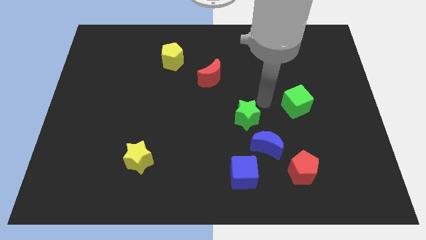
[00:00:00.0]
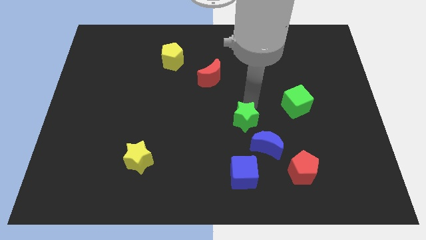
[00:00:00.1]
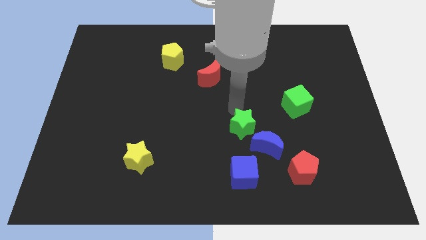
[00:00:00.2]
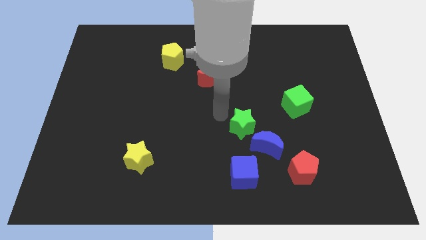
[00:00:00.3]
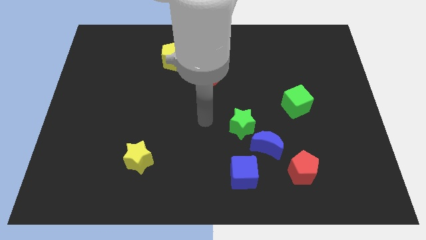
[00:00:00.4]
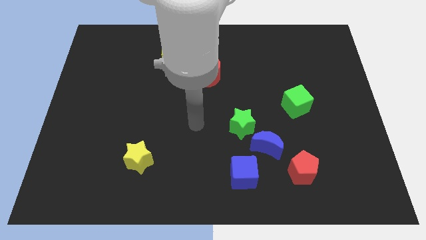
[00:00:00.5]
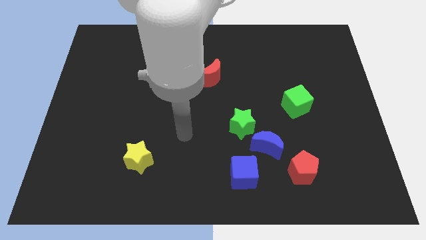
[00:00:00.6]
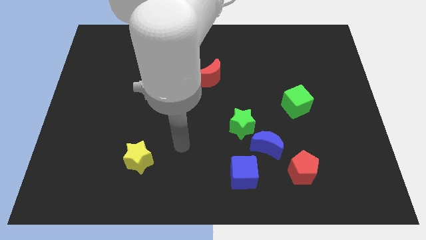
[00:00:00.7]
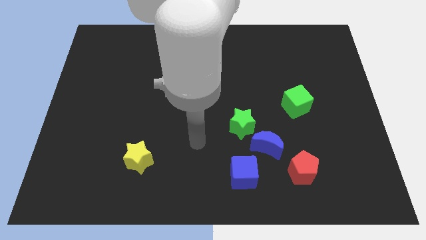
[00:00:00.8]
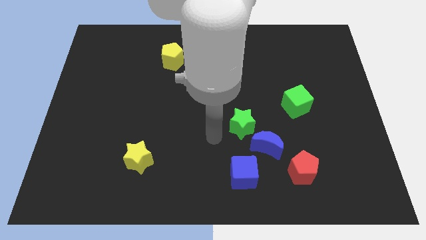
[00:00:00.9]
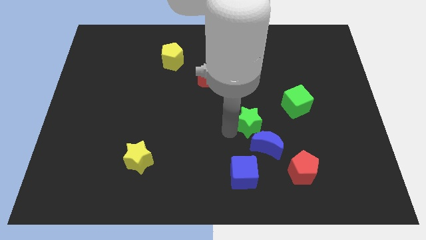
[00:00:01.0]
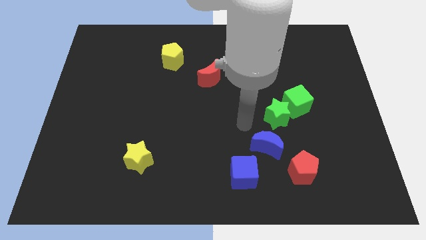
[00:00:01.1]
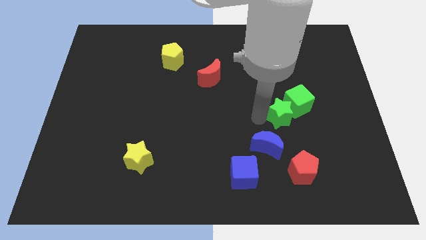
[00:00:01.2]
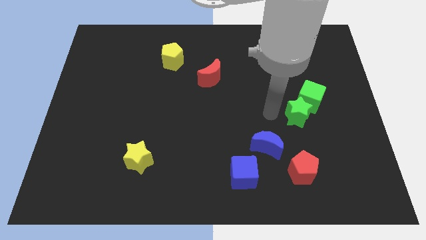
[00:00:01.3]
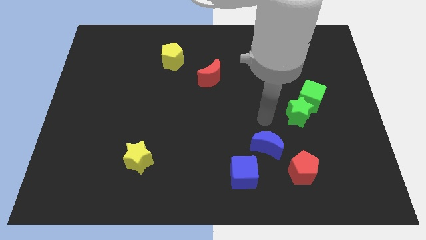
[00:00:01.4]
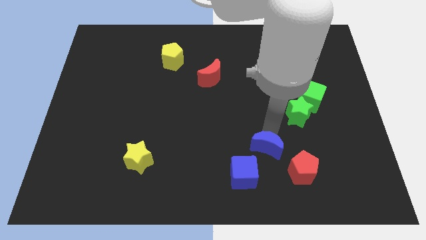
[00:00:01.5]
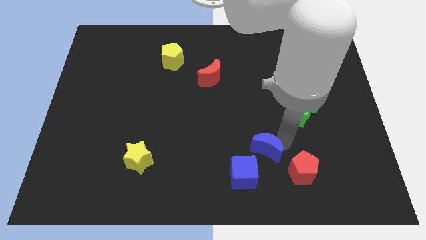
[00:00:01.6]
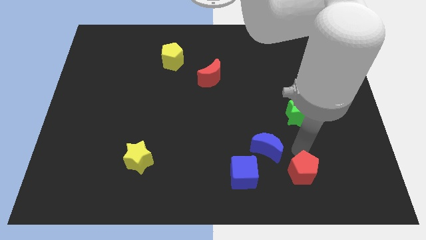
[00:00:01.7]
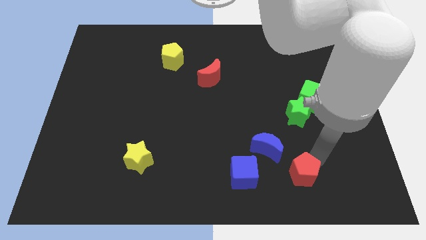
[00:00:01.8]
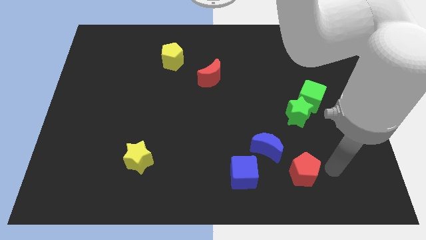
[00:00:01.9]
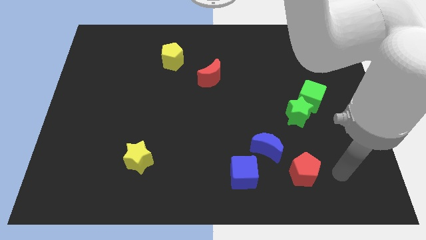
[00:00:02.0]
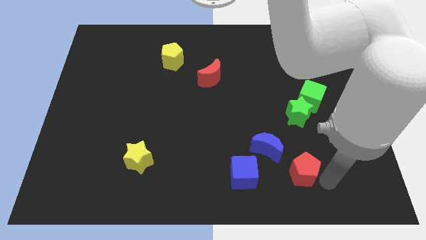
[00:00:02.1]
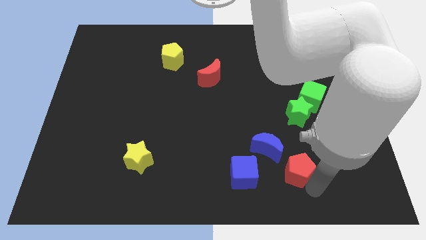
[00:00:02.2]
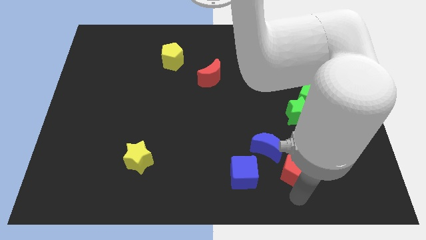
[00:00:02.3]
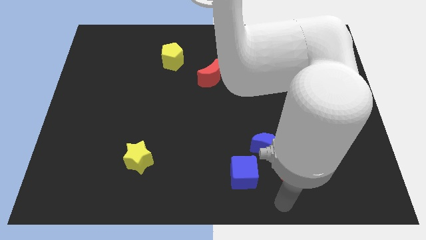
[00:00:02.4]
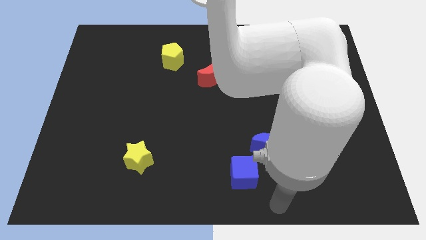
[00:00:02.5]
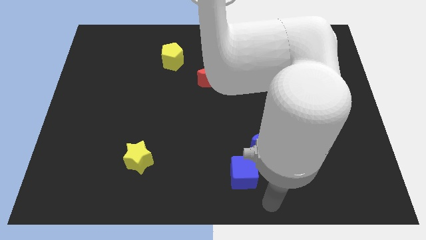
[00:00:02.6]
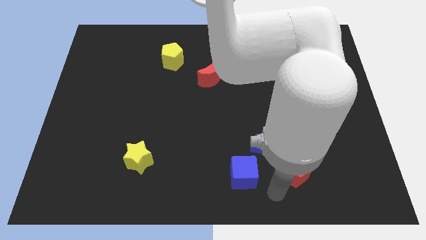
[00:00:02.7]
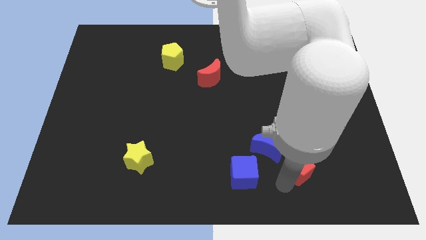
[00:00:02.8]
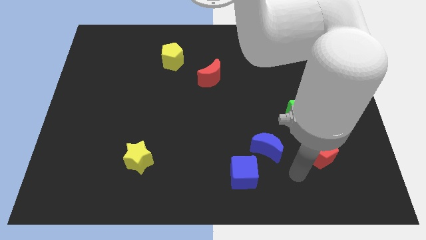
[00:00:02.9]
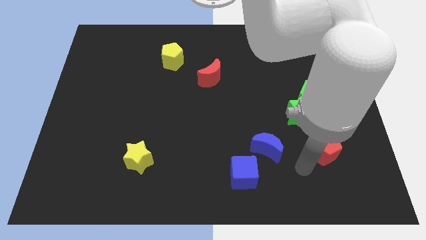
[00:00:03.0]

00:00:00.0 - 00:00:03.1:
push the green blocks and the red pentagon towards the center right

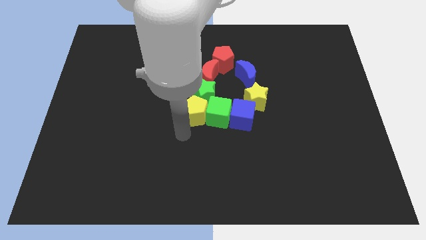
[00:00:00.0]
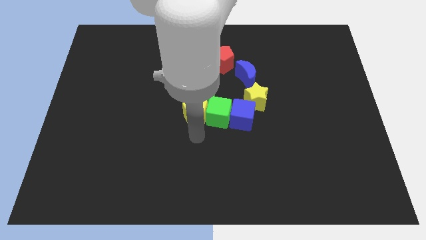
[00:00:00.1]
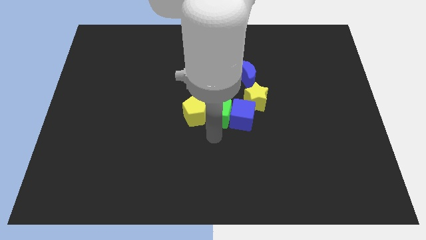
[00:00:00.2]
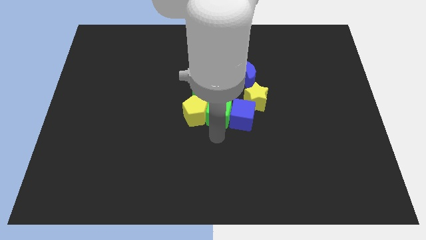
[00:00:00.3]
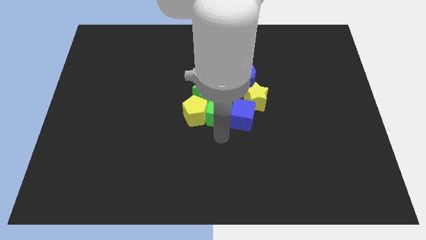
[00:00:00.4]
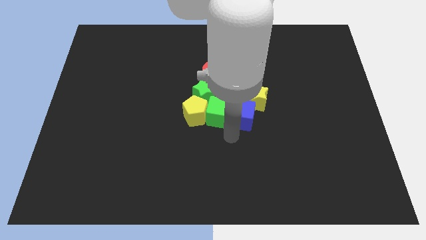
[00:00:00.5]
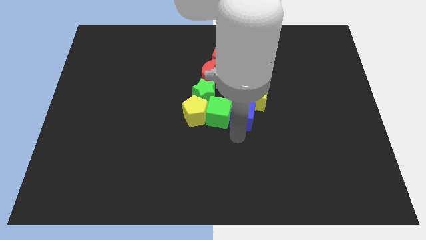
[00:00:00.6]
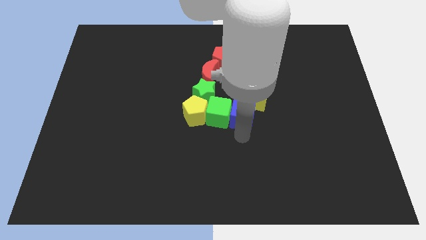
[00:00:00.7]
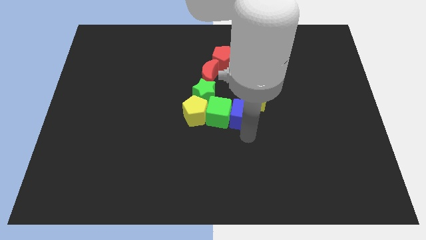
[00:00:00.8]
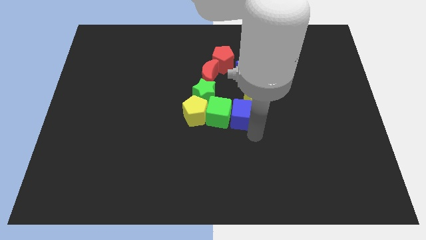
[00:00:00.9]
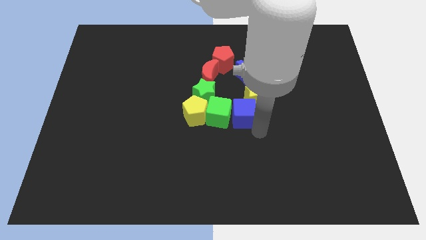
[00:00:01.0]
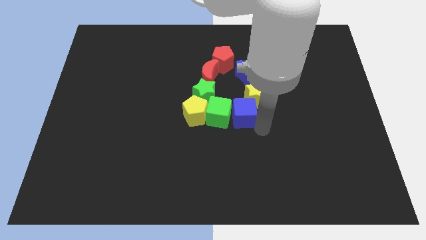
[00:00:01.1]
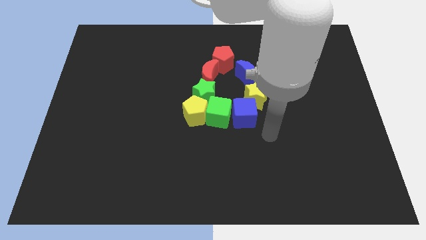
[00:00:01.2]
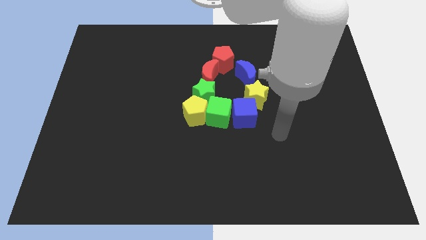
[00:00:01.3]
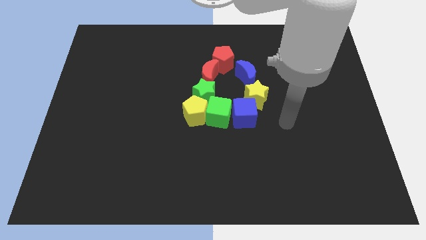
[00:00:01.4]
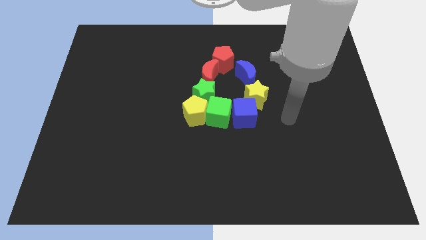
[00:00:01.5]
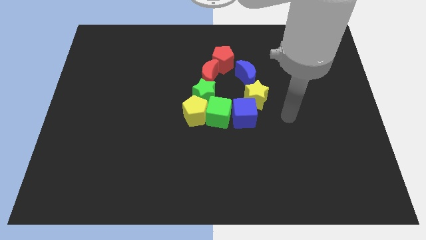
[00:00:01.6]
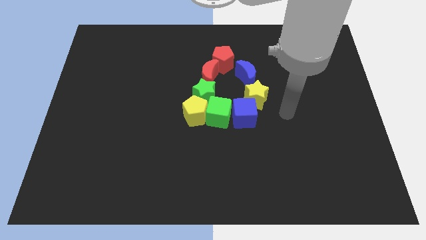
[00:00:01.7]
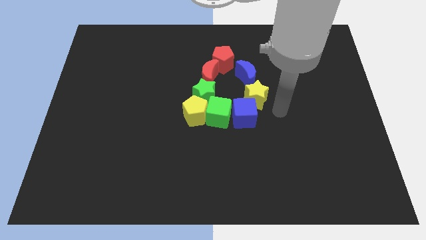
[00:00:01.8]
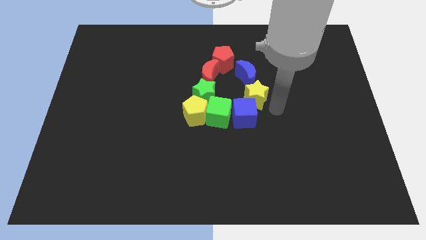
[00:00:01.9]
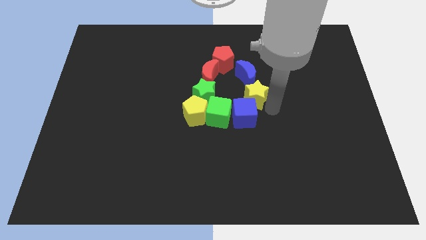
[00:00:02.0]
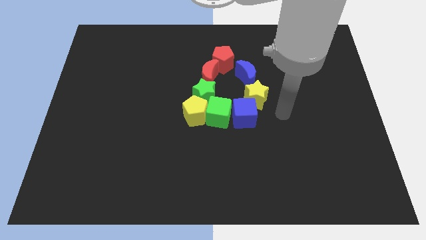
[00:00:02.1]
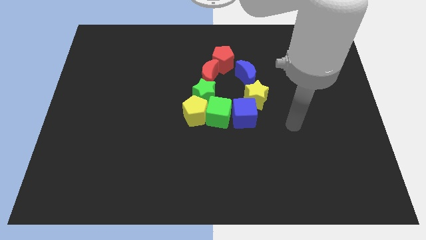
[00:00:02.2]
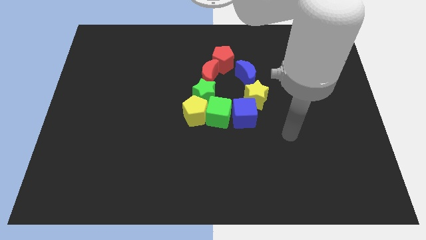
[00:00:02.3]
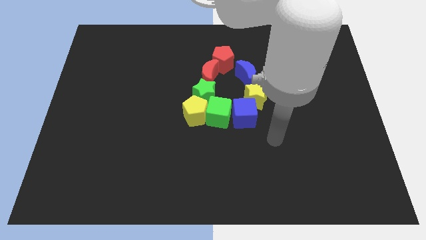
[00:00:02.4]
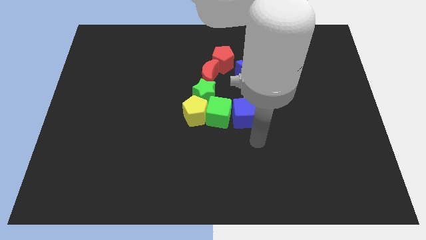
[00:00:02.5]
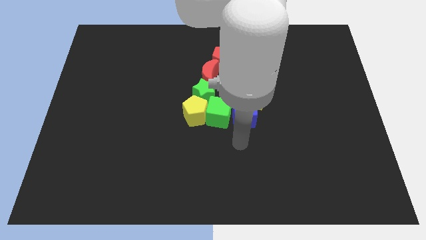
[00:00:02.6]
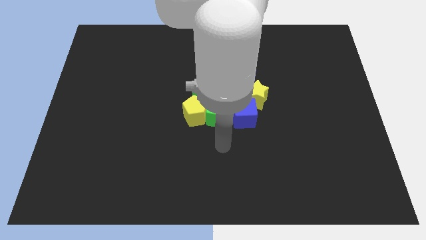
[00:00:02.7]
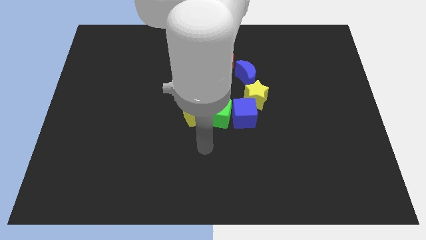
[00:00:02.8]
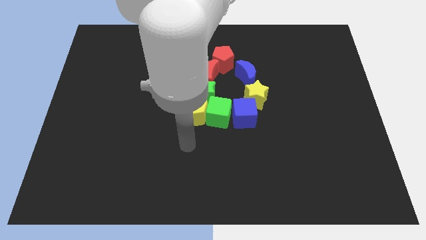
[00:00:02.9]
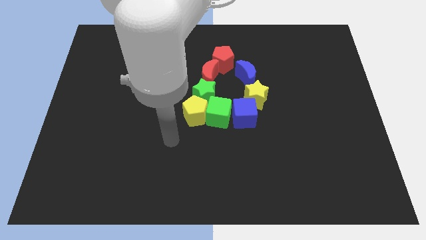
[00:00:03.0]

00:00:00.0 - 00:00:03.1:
move your arm towards the bottom of the yellow pentagon

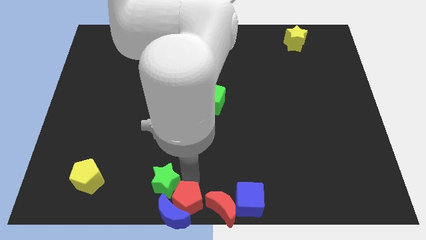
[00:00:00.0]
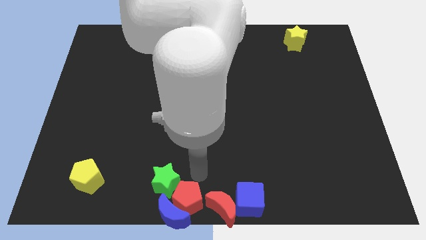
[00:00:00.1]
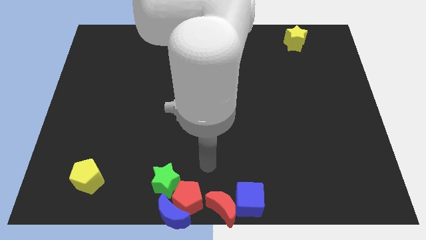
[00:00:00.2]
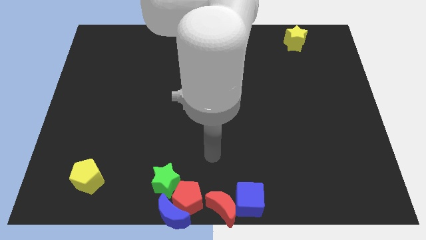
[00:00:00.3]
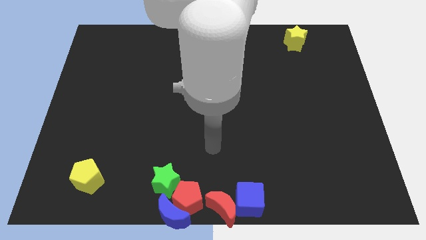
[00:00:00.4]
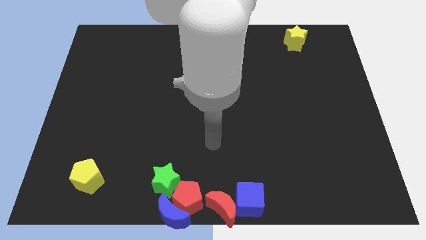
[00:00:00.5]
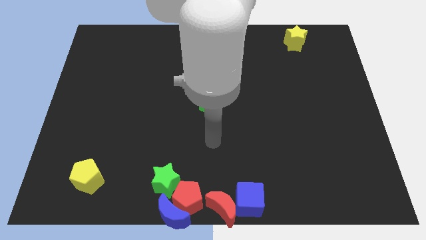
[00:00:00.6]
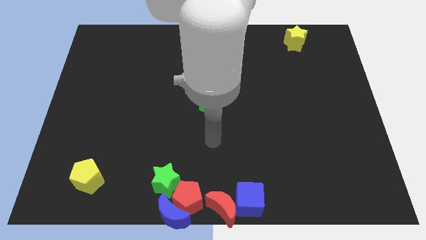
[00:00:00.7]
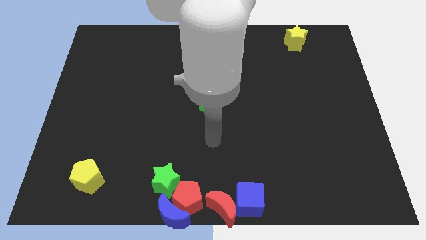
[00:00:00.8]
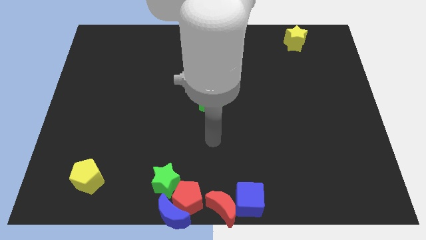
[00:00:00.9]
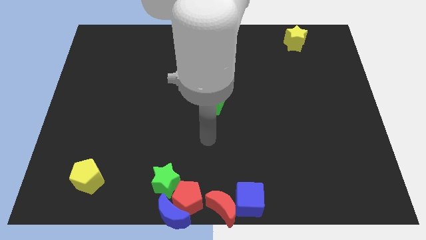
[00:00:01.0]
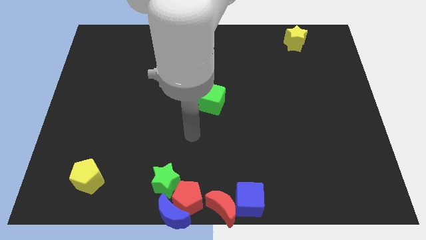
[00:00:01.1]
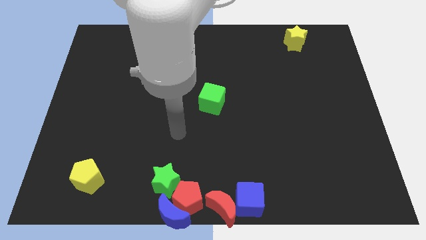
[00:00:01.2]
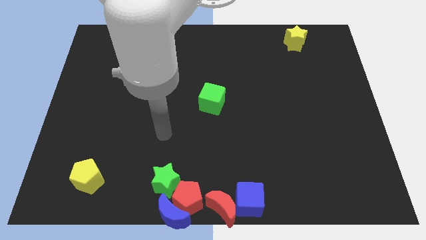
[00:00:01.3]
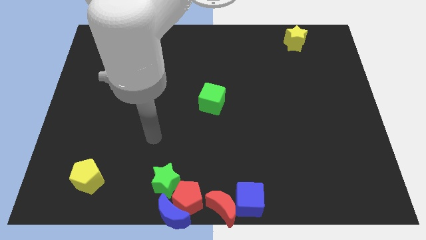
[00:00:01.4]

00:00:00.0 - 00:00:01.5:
move your arm away from the red pentagon

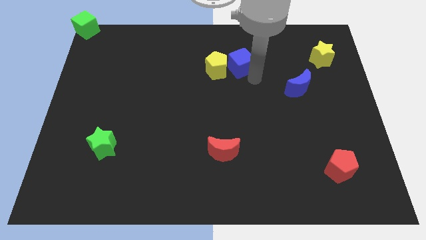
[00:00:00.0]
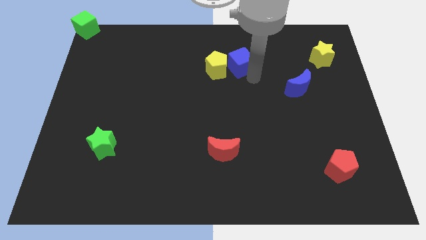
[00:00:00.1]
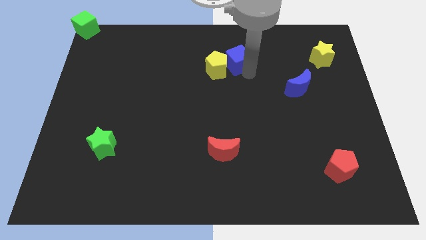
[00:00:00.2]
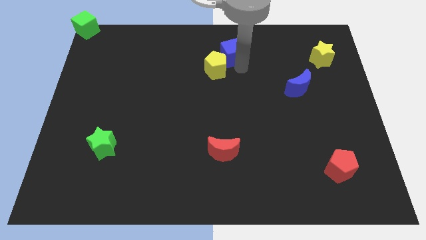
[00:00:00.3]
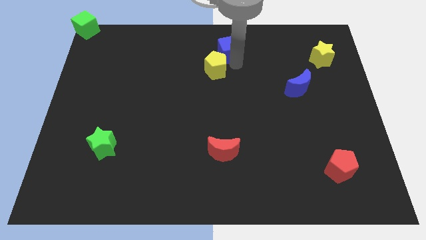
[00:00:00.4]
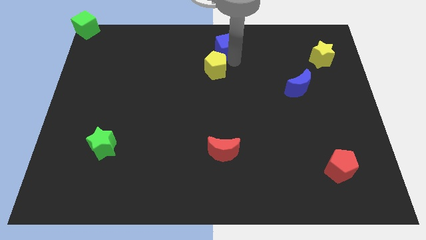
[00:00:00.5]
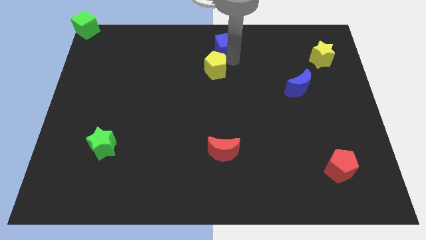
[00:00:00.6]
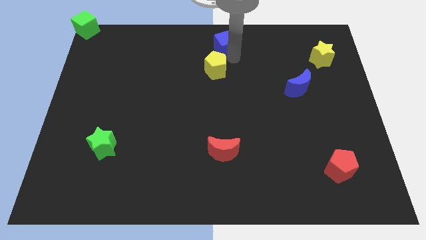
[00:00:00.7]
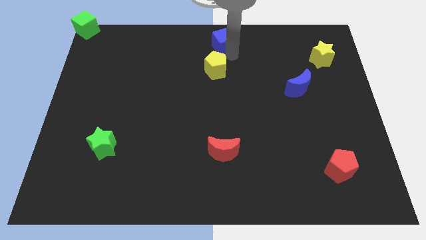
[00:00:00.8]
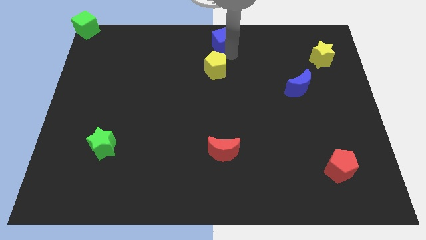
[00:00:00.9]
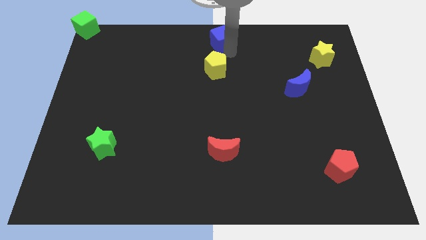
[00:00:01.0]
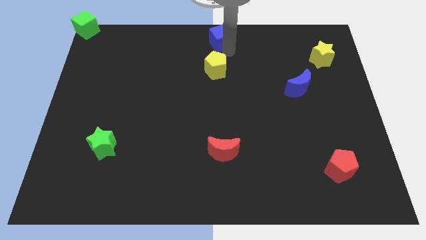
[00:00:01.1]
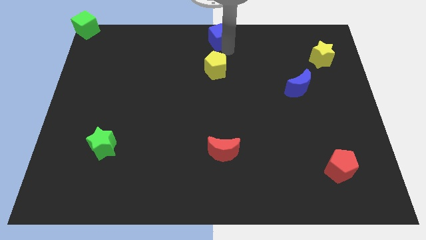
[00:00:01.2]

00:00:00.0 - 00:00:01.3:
place blue cube above yellow pentagon
